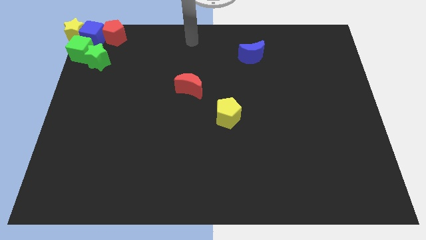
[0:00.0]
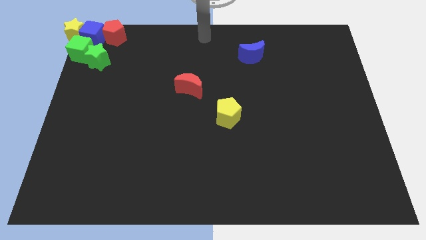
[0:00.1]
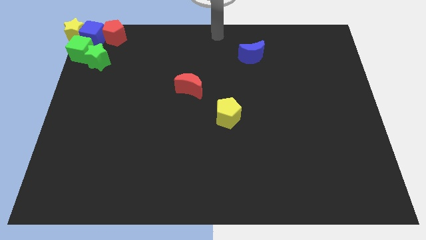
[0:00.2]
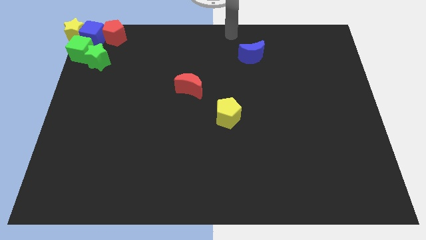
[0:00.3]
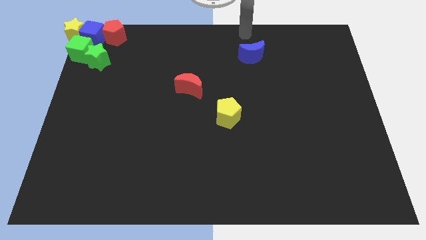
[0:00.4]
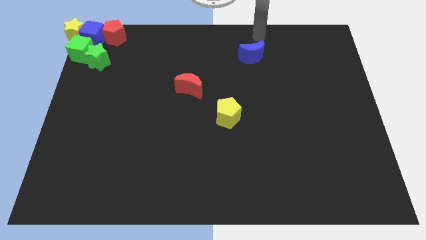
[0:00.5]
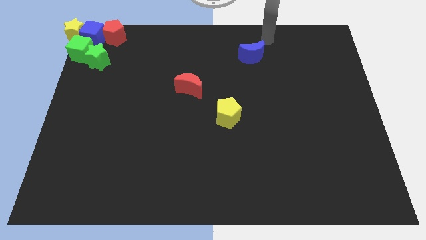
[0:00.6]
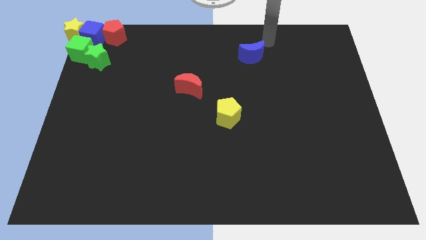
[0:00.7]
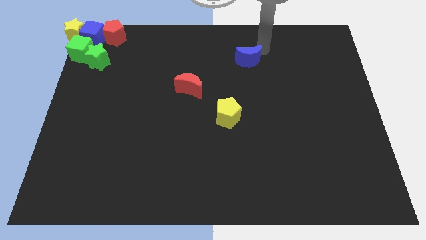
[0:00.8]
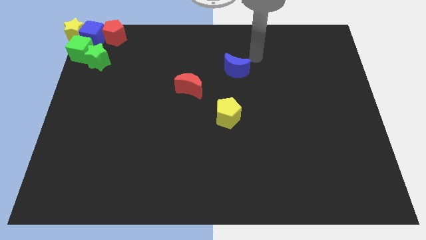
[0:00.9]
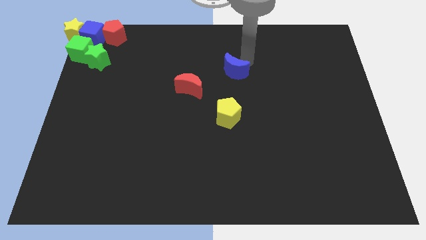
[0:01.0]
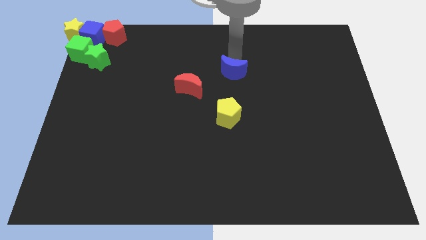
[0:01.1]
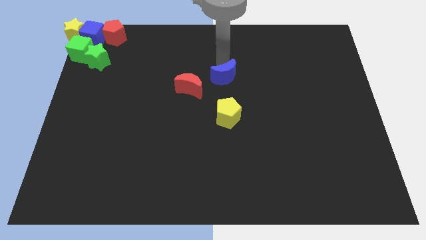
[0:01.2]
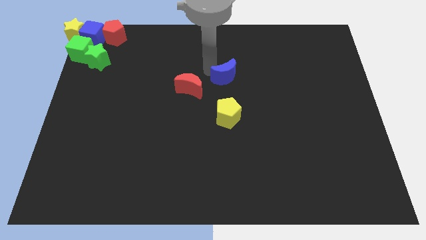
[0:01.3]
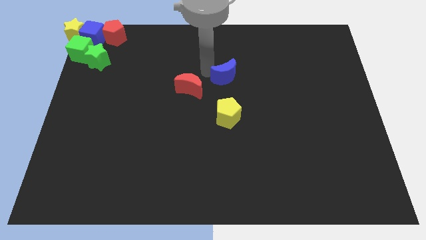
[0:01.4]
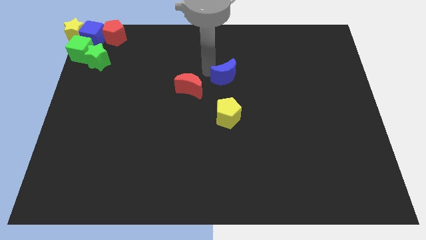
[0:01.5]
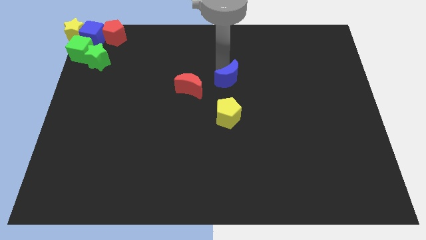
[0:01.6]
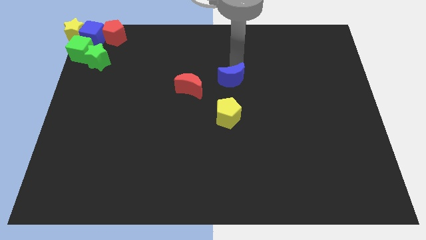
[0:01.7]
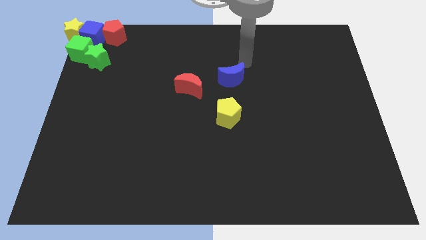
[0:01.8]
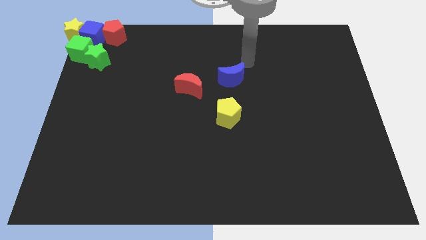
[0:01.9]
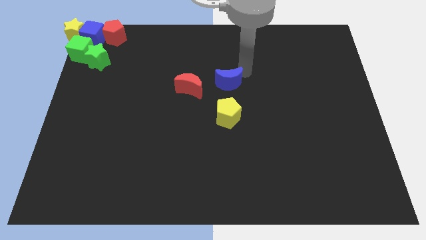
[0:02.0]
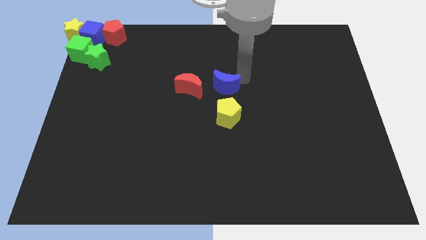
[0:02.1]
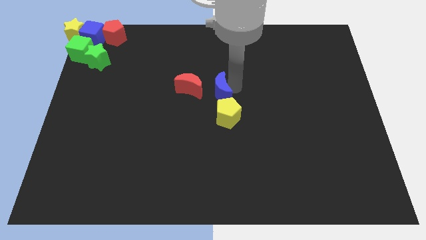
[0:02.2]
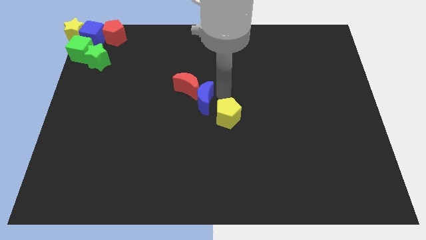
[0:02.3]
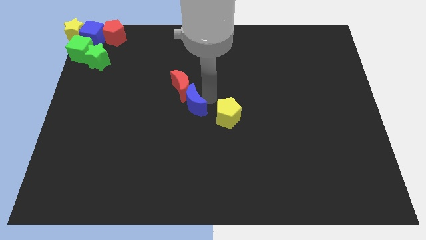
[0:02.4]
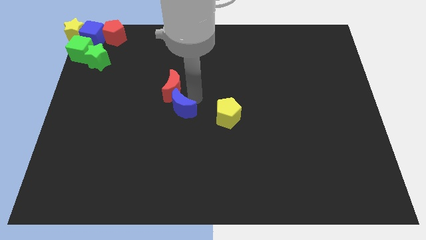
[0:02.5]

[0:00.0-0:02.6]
push the blue crescent into the red crescent

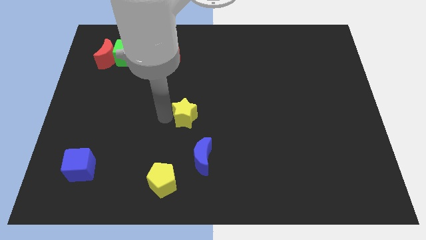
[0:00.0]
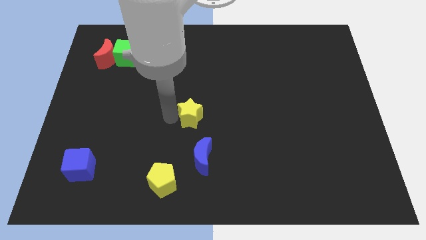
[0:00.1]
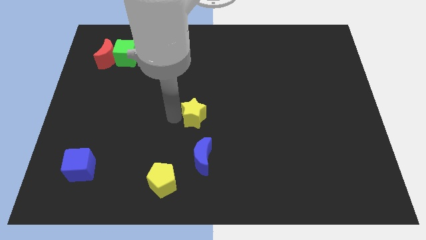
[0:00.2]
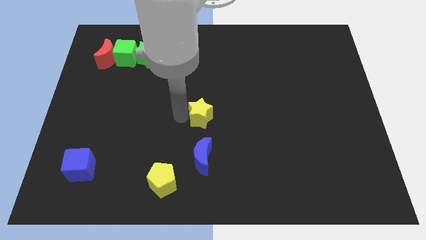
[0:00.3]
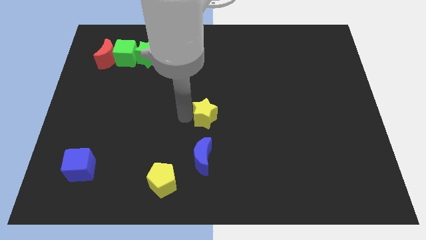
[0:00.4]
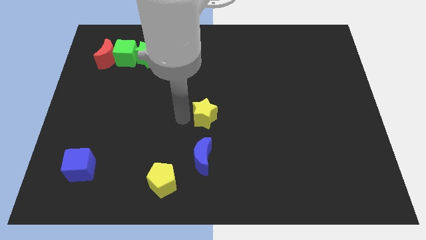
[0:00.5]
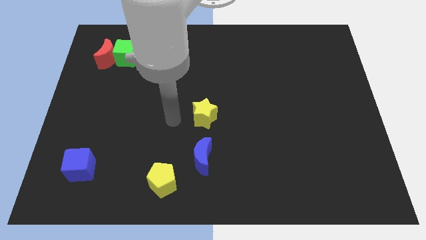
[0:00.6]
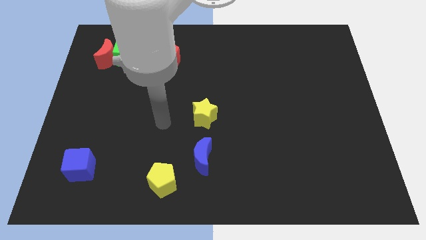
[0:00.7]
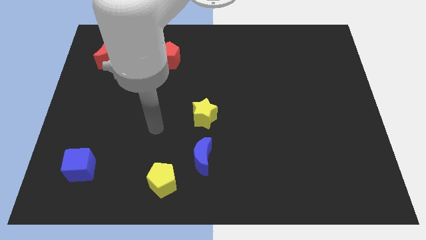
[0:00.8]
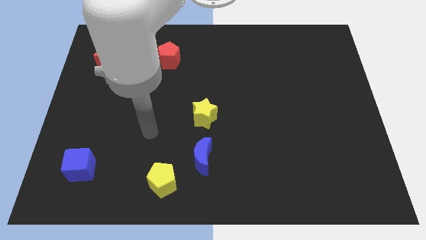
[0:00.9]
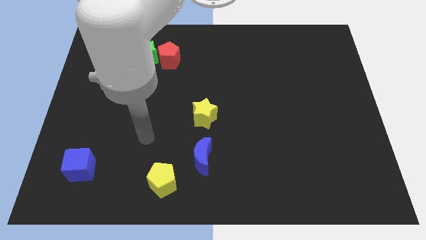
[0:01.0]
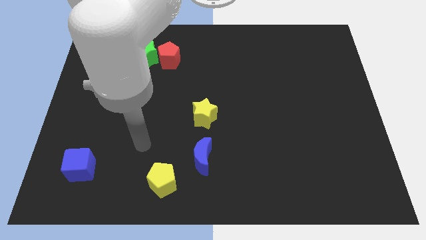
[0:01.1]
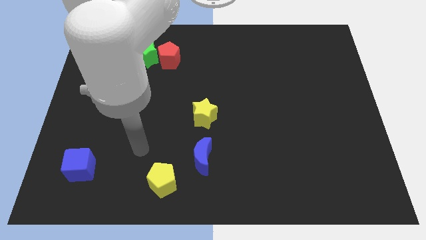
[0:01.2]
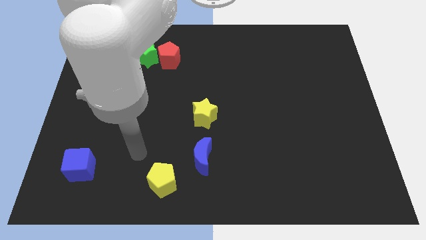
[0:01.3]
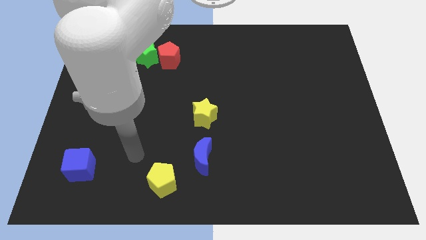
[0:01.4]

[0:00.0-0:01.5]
push the yellow star to the top of the blue moon

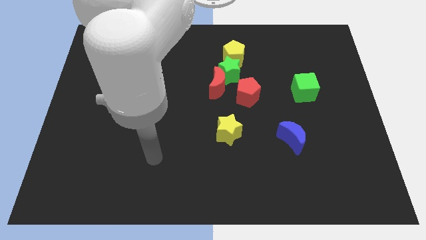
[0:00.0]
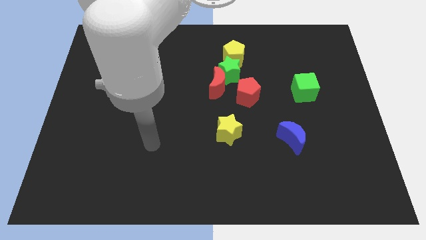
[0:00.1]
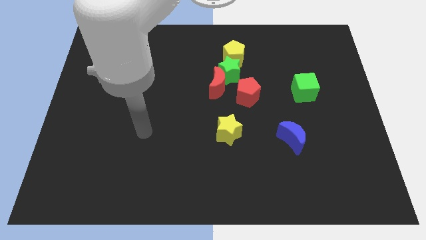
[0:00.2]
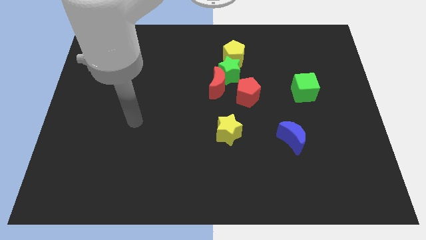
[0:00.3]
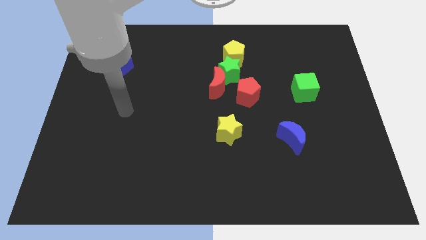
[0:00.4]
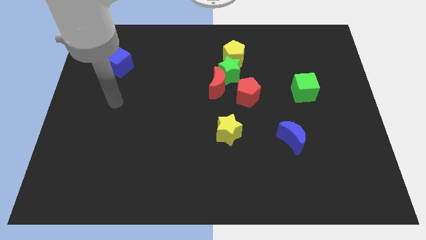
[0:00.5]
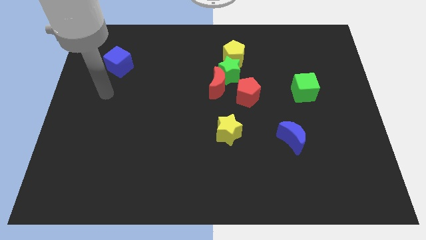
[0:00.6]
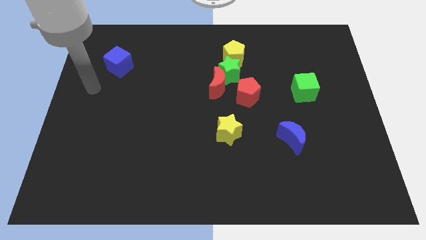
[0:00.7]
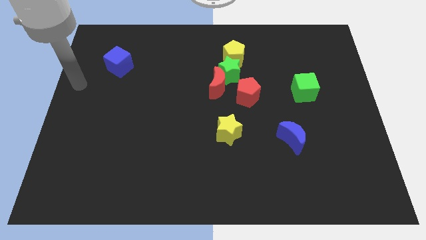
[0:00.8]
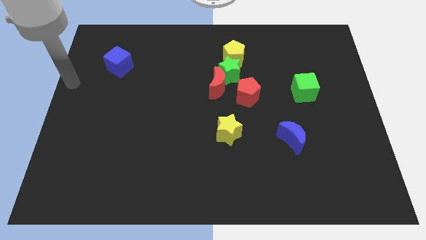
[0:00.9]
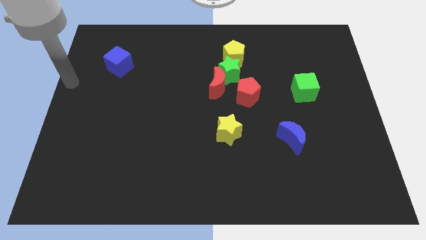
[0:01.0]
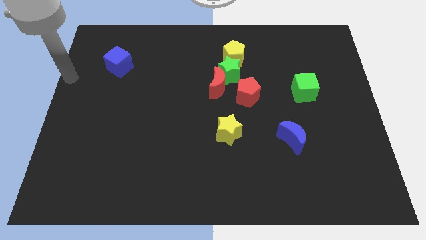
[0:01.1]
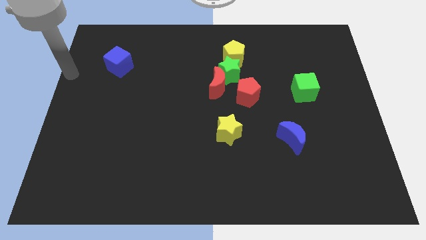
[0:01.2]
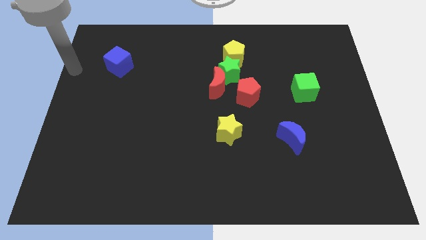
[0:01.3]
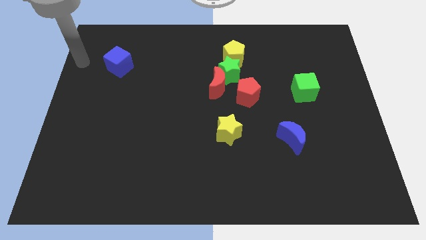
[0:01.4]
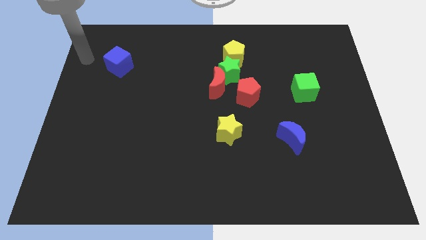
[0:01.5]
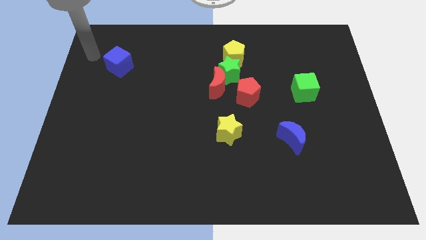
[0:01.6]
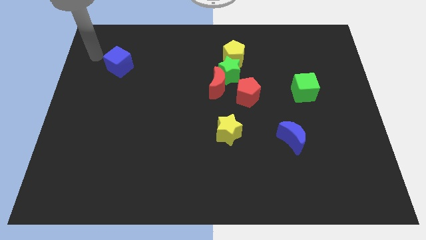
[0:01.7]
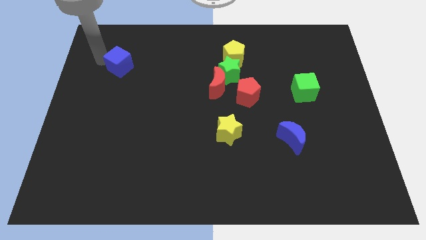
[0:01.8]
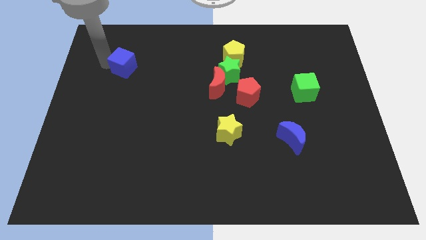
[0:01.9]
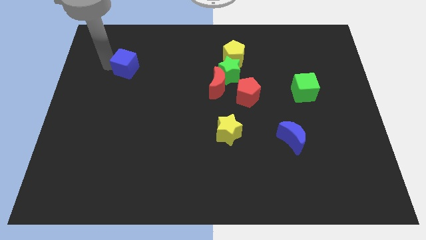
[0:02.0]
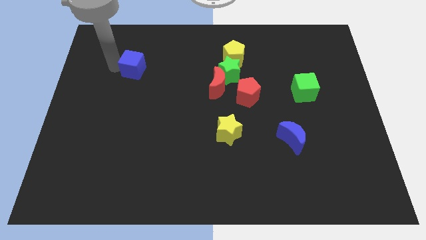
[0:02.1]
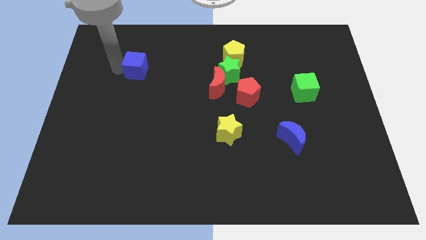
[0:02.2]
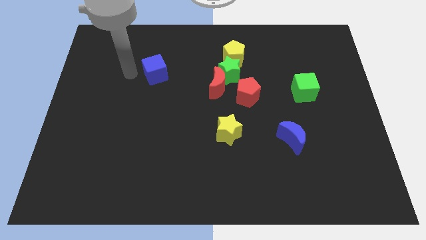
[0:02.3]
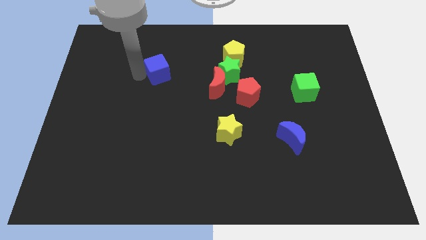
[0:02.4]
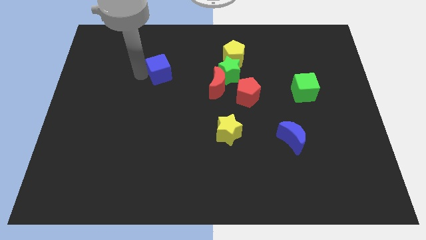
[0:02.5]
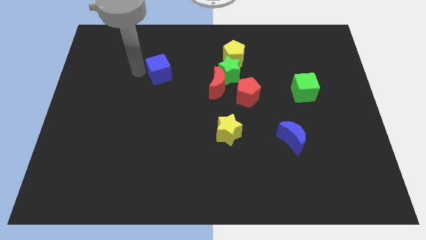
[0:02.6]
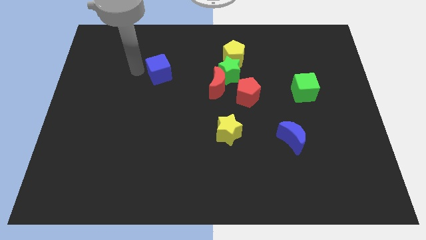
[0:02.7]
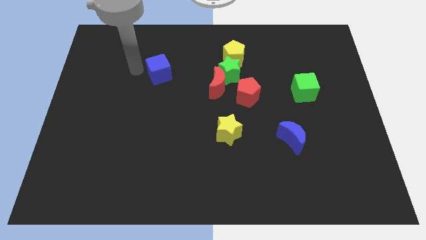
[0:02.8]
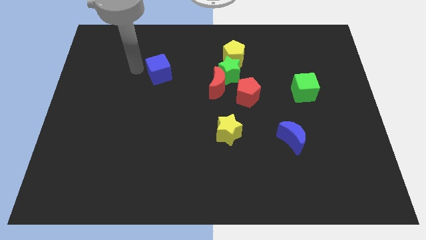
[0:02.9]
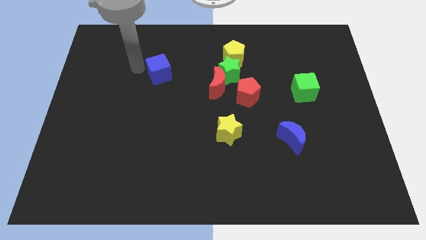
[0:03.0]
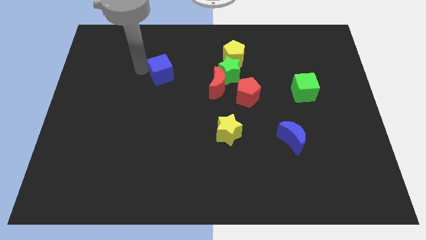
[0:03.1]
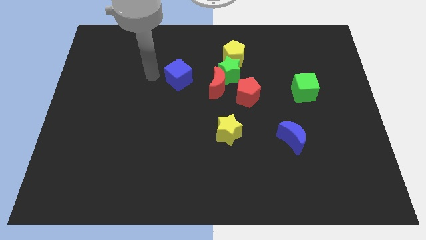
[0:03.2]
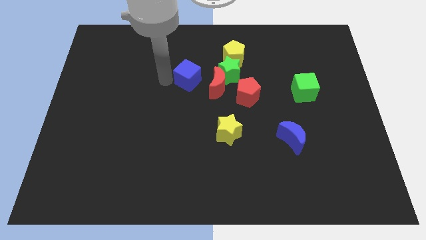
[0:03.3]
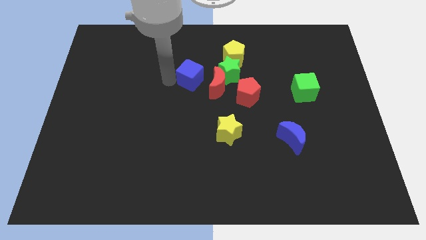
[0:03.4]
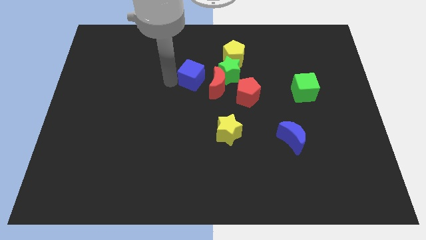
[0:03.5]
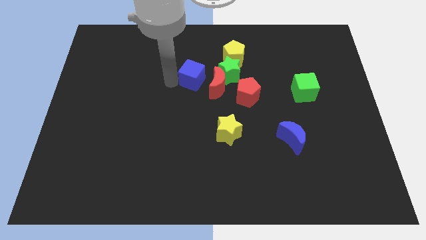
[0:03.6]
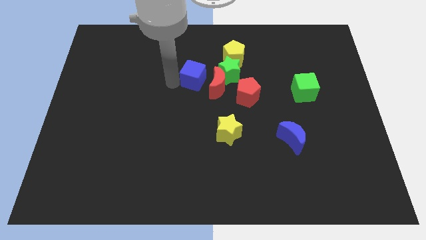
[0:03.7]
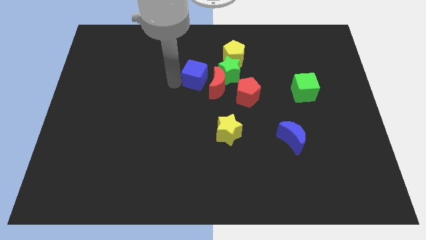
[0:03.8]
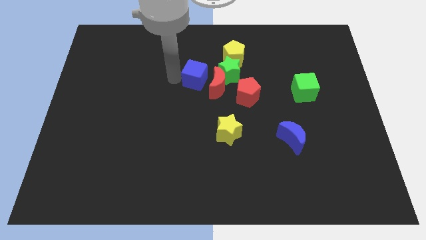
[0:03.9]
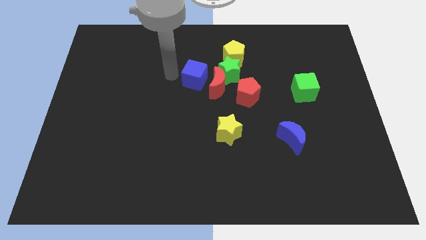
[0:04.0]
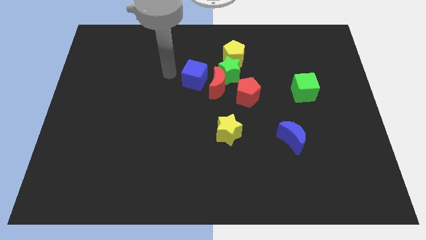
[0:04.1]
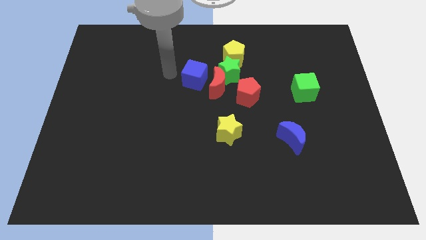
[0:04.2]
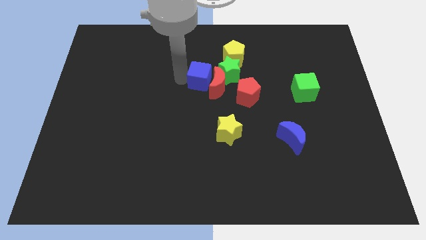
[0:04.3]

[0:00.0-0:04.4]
push the blue cube towards the left side of the red crescent

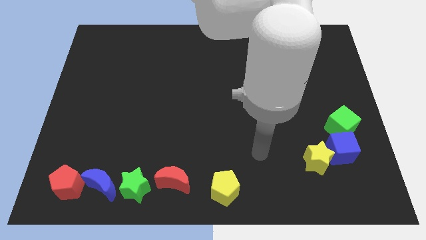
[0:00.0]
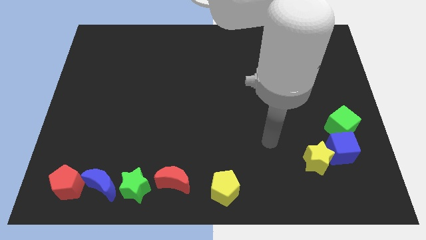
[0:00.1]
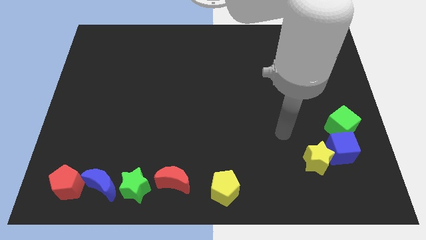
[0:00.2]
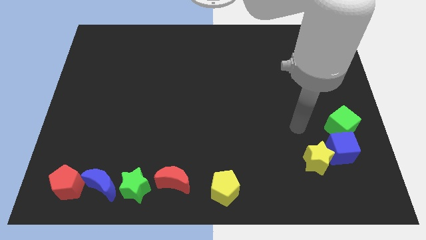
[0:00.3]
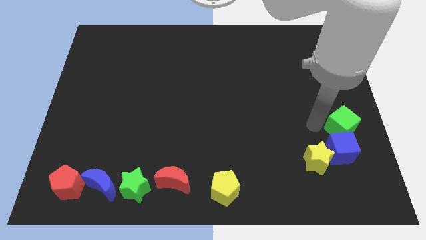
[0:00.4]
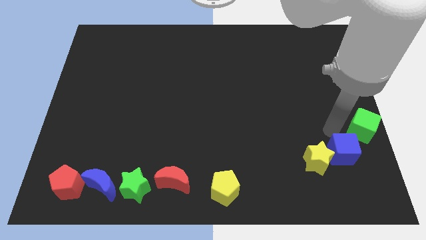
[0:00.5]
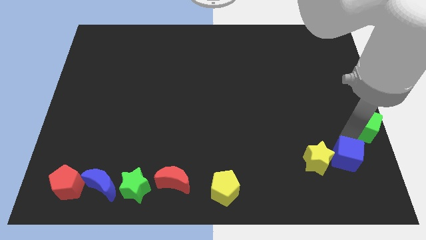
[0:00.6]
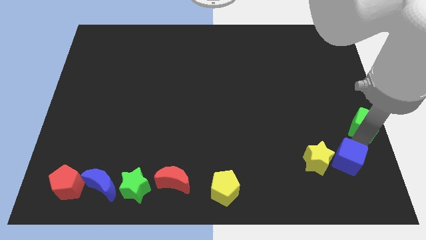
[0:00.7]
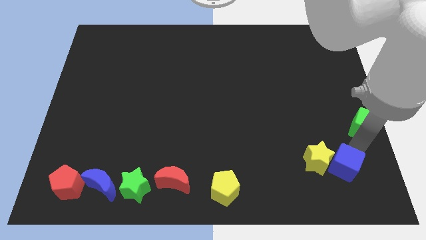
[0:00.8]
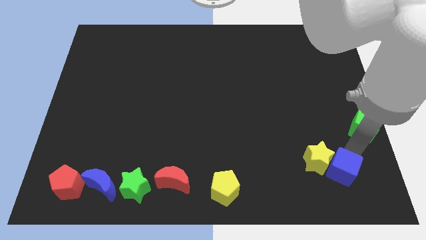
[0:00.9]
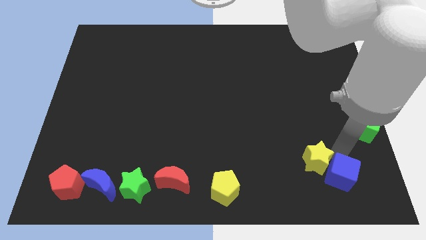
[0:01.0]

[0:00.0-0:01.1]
separate the blue cube from the green cube
